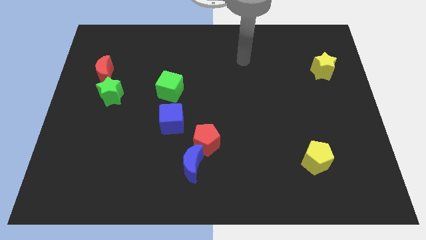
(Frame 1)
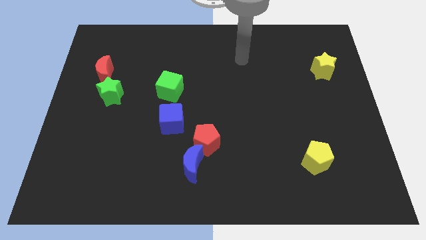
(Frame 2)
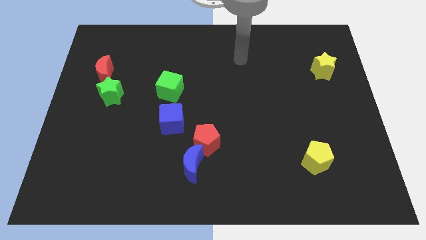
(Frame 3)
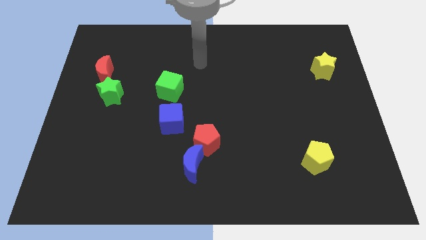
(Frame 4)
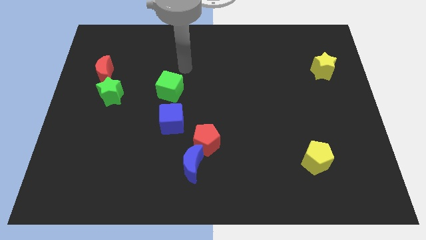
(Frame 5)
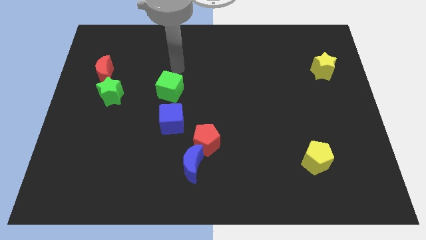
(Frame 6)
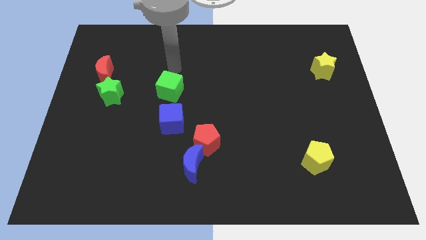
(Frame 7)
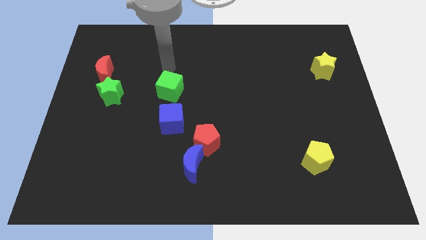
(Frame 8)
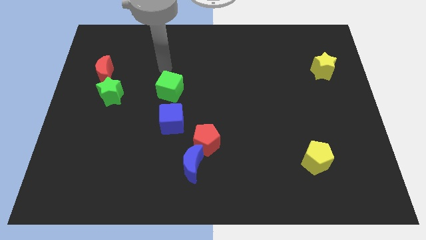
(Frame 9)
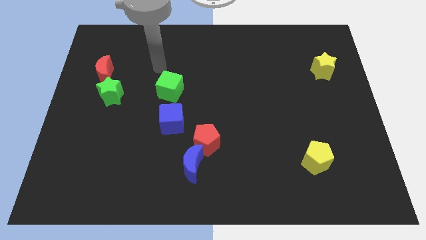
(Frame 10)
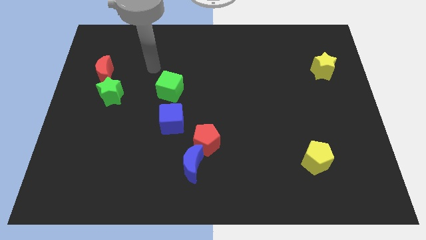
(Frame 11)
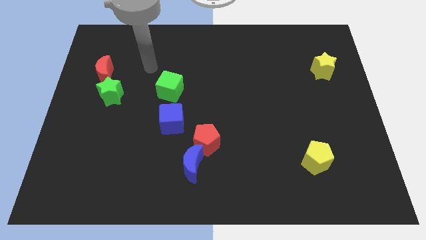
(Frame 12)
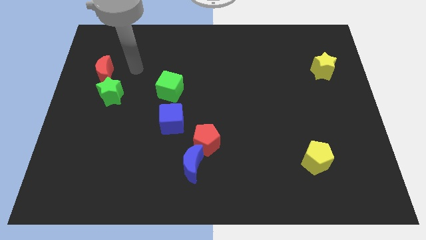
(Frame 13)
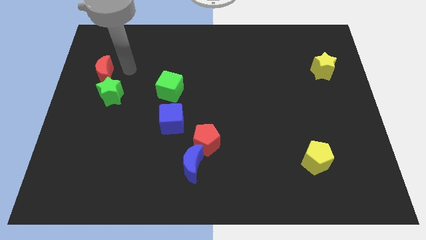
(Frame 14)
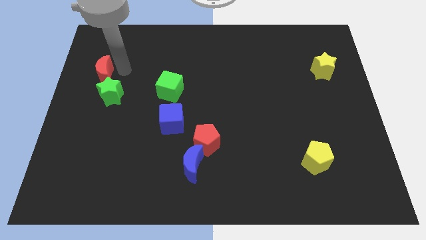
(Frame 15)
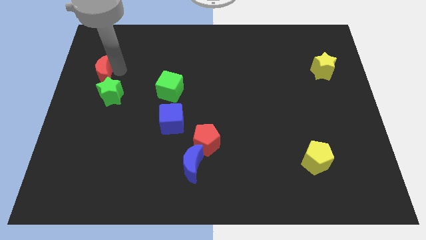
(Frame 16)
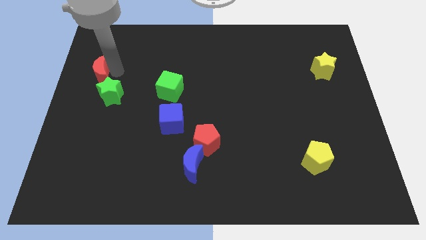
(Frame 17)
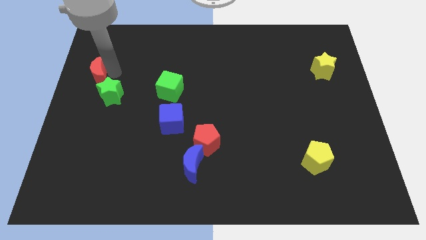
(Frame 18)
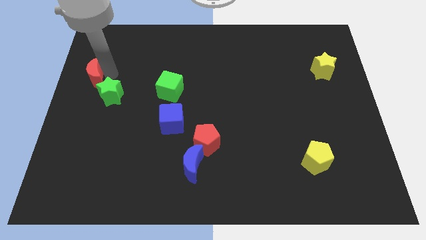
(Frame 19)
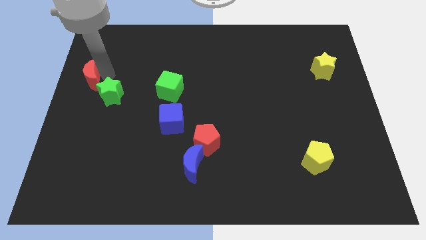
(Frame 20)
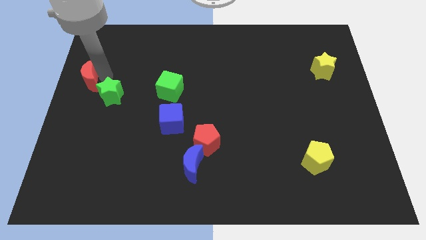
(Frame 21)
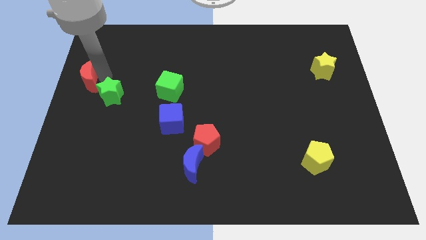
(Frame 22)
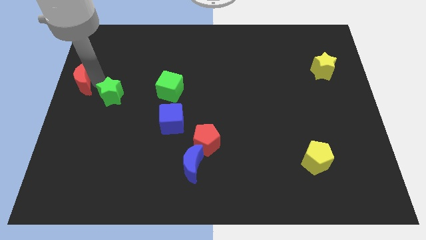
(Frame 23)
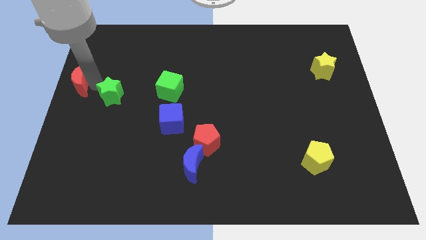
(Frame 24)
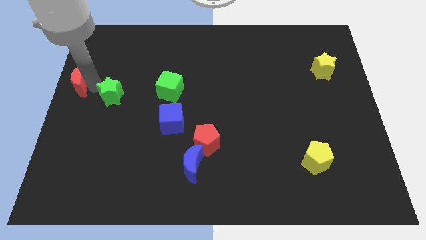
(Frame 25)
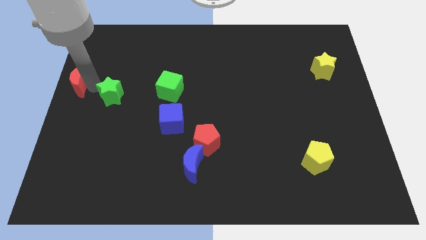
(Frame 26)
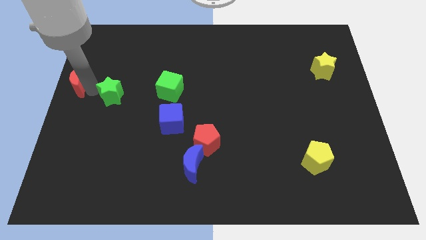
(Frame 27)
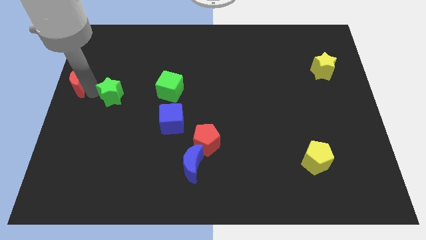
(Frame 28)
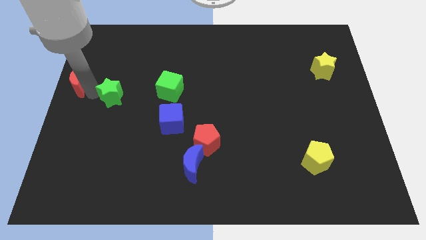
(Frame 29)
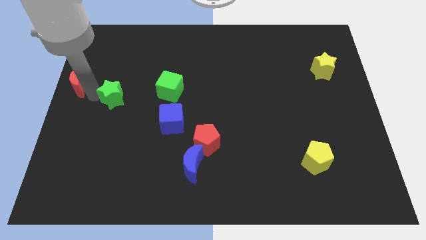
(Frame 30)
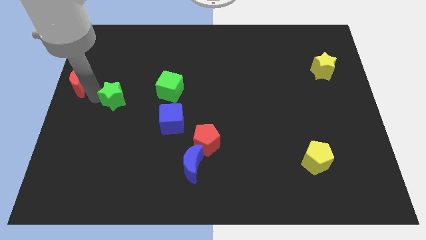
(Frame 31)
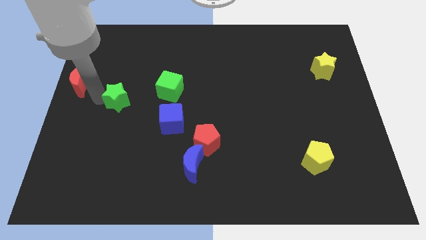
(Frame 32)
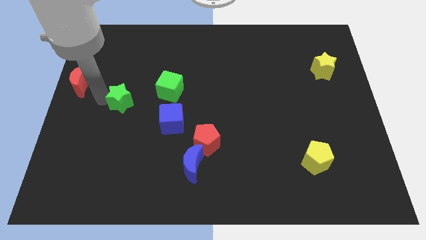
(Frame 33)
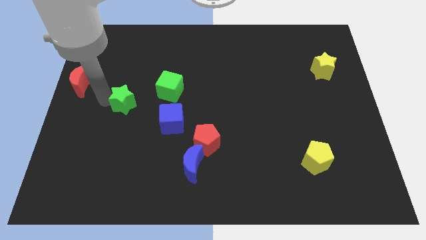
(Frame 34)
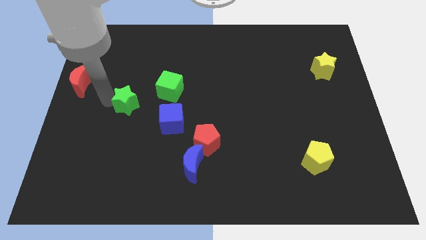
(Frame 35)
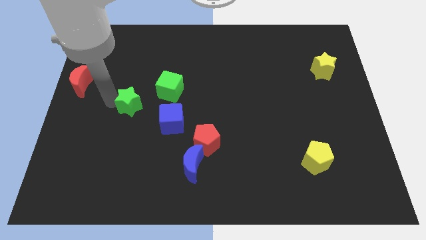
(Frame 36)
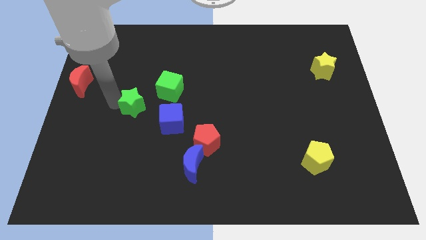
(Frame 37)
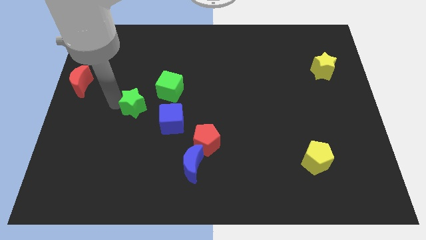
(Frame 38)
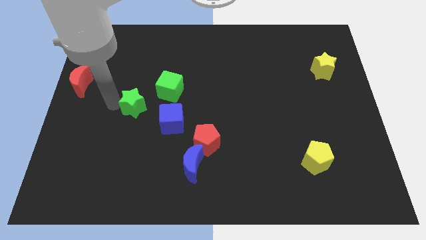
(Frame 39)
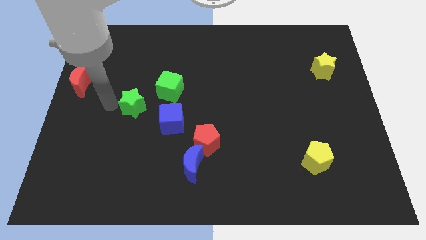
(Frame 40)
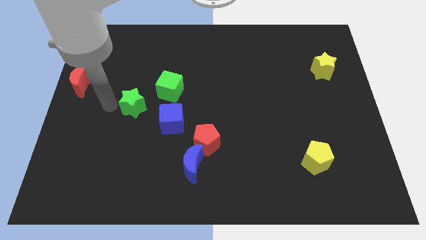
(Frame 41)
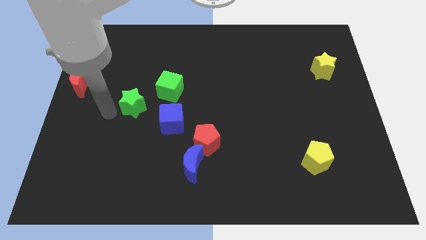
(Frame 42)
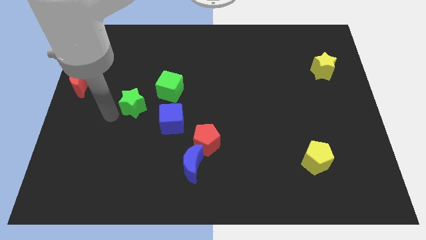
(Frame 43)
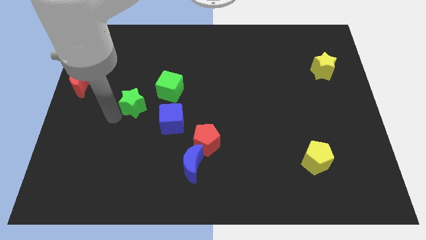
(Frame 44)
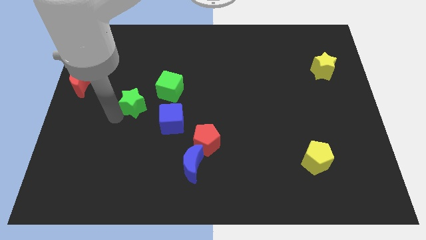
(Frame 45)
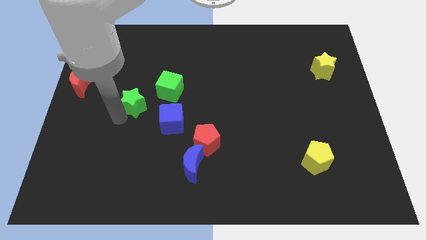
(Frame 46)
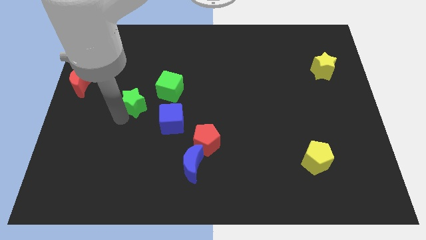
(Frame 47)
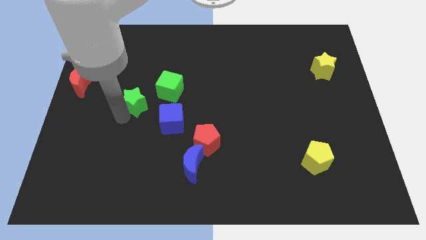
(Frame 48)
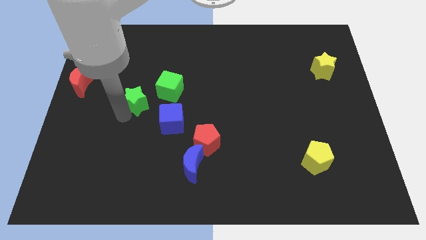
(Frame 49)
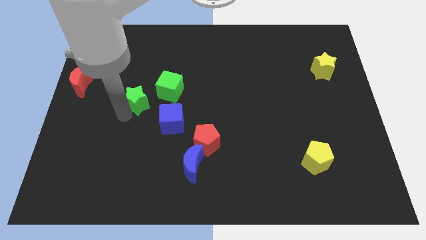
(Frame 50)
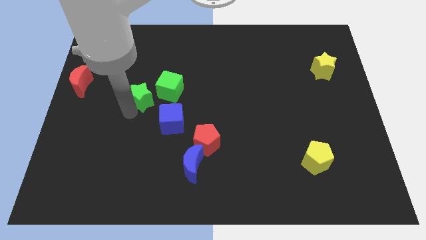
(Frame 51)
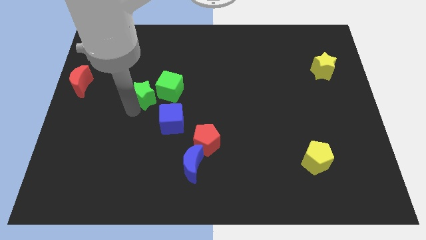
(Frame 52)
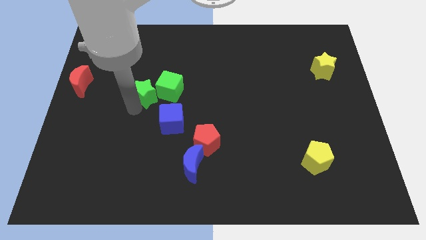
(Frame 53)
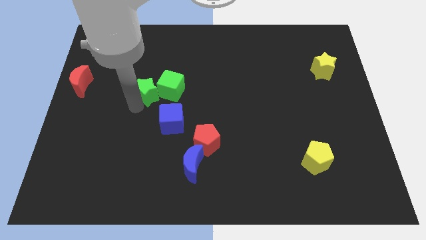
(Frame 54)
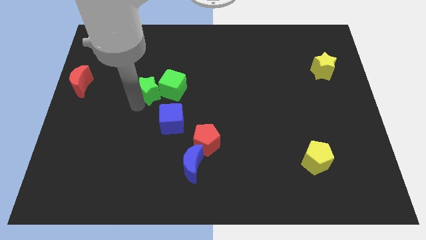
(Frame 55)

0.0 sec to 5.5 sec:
put the green star next to the green cube

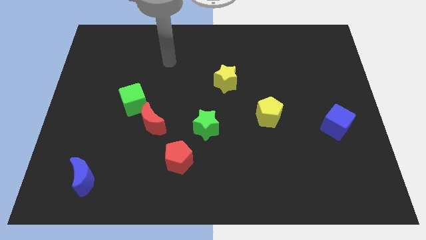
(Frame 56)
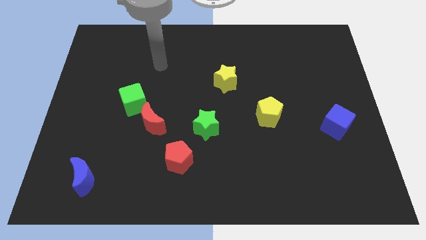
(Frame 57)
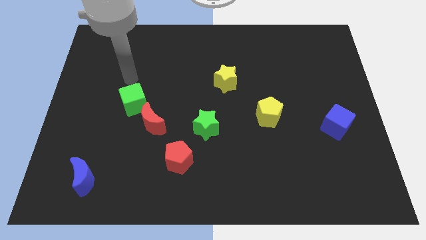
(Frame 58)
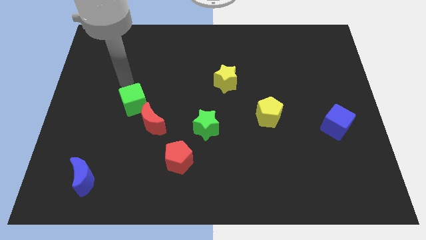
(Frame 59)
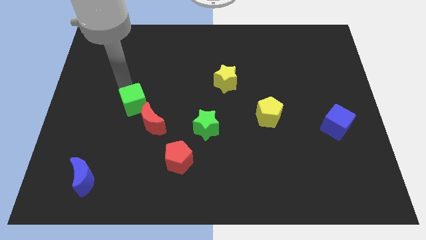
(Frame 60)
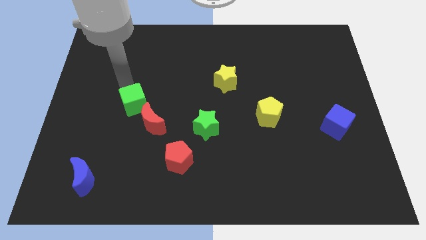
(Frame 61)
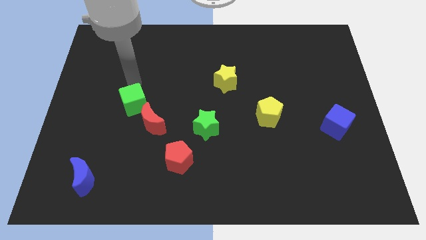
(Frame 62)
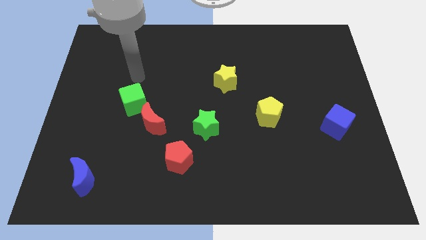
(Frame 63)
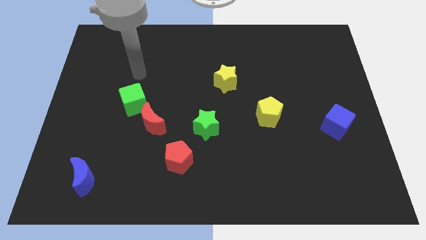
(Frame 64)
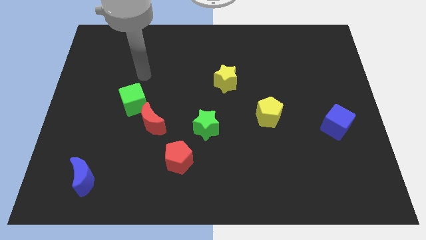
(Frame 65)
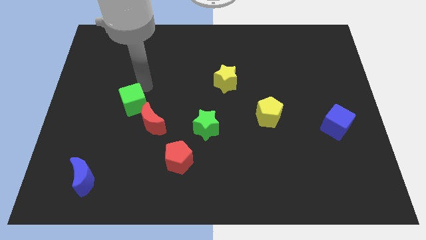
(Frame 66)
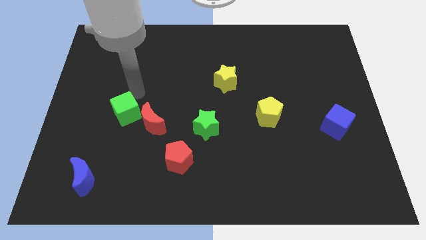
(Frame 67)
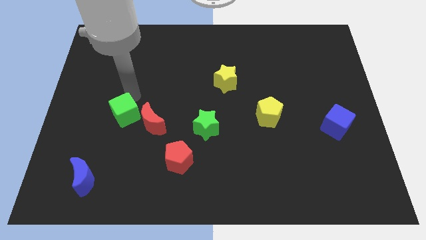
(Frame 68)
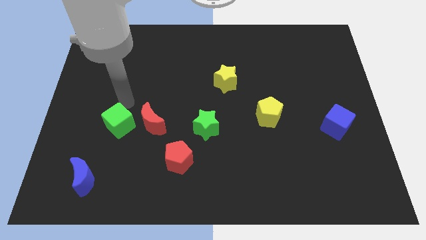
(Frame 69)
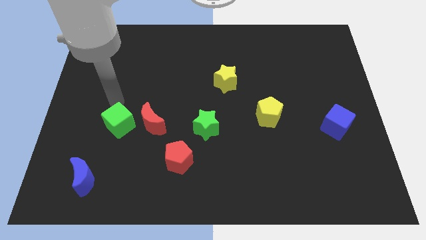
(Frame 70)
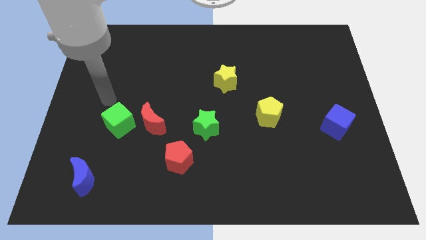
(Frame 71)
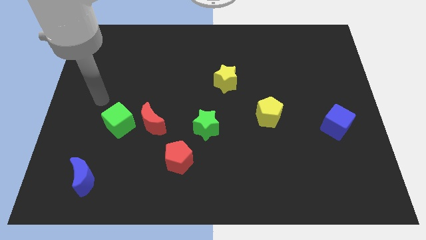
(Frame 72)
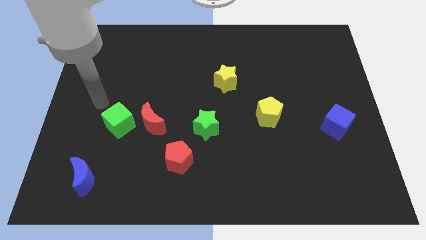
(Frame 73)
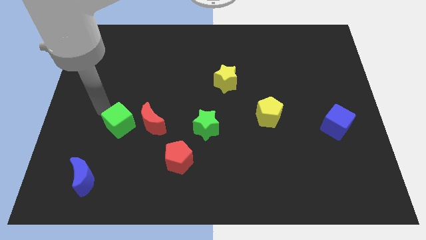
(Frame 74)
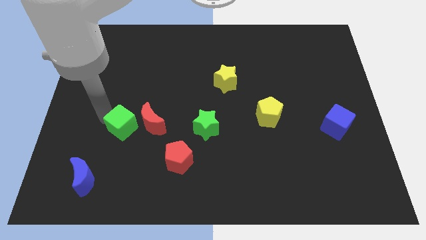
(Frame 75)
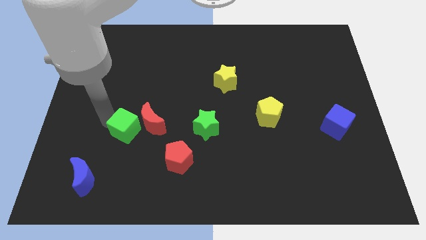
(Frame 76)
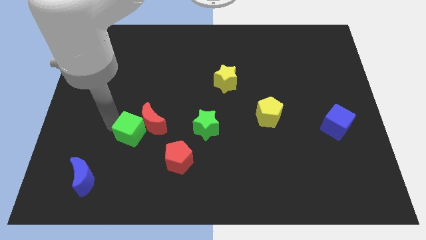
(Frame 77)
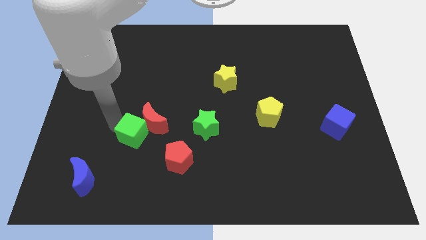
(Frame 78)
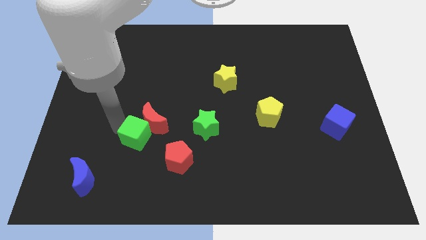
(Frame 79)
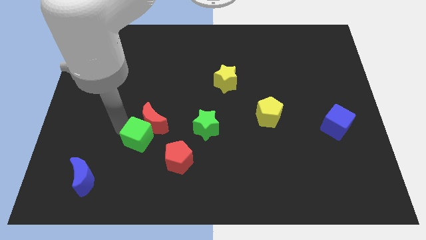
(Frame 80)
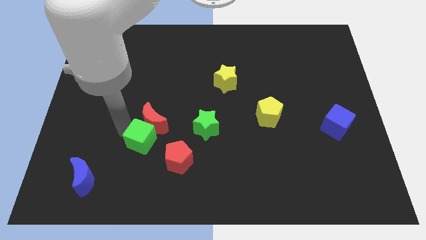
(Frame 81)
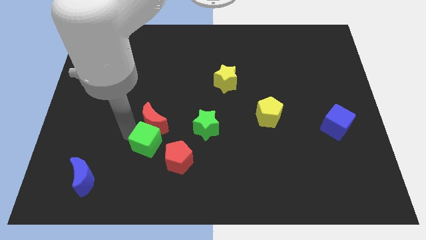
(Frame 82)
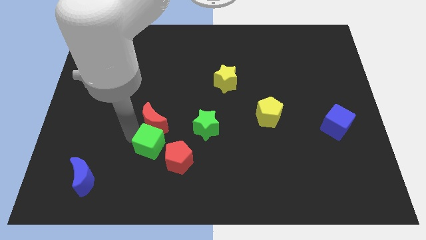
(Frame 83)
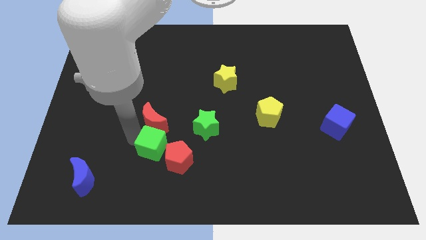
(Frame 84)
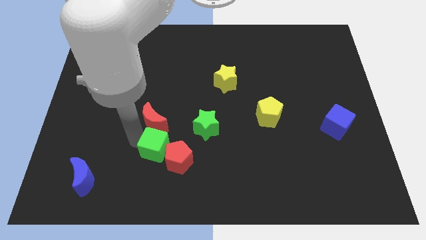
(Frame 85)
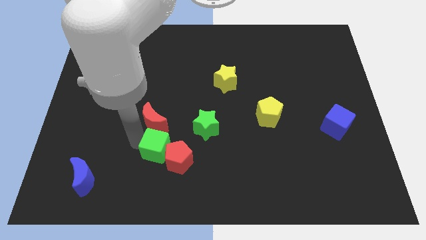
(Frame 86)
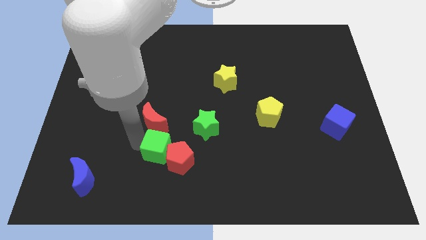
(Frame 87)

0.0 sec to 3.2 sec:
push the green cube towards the red pentagon
